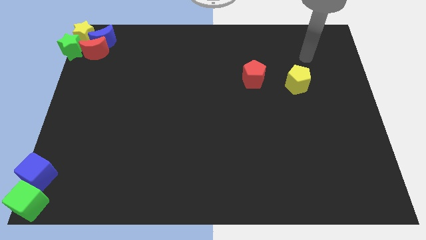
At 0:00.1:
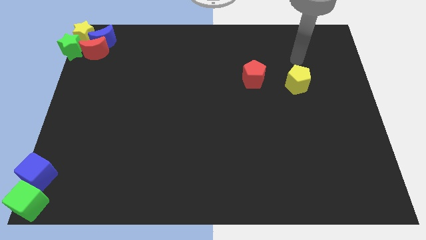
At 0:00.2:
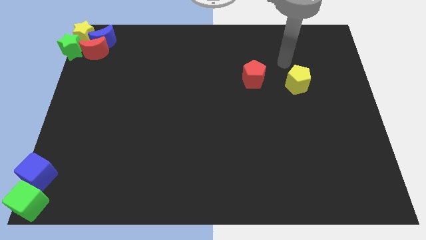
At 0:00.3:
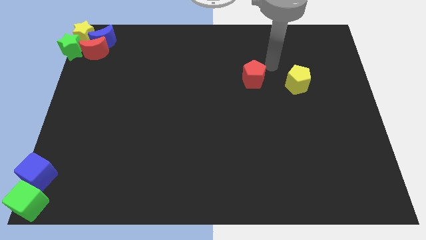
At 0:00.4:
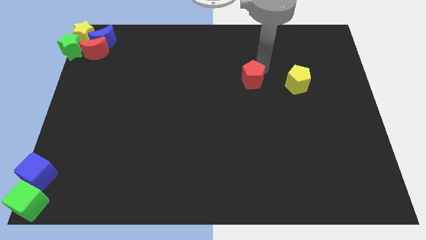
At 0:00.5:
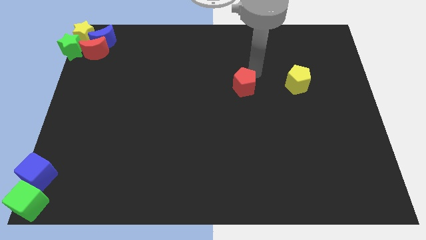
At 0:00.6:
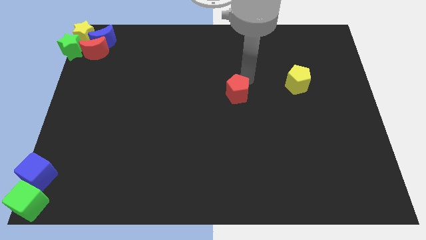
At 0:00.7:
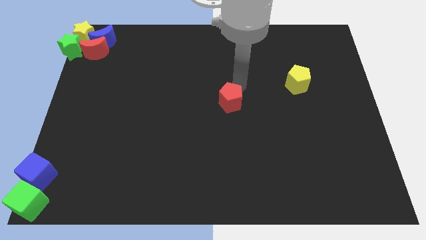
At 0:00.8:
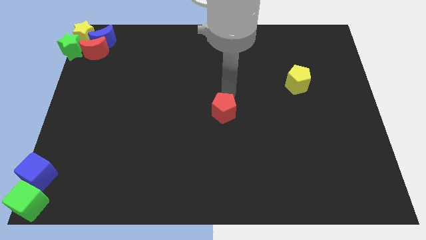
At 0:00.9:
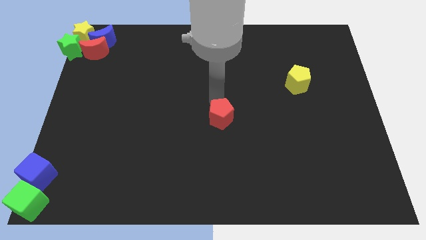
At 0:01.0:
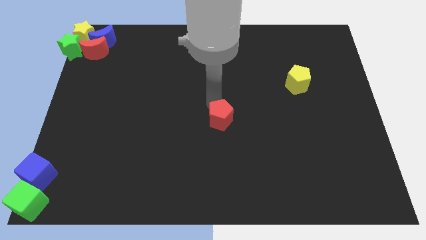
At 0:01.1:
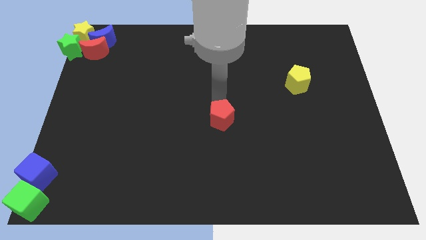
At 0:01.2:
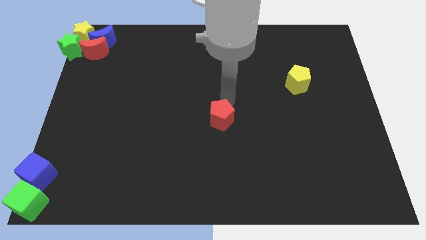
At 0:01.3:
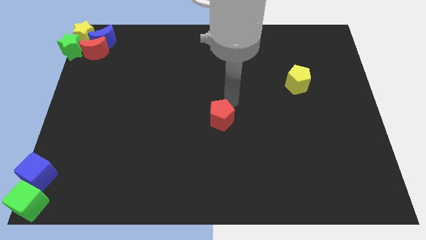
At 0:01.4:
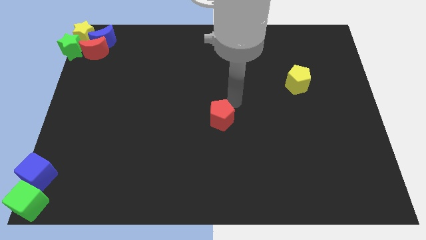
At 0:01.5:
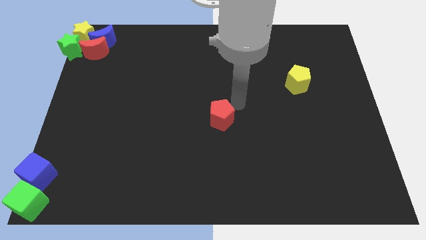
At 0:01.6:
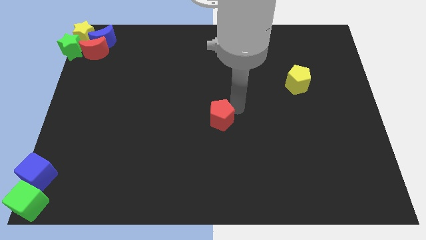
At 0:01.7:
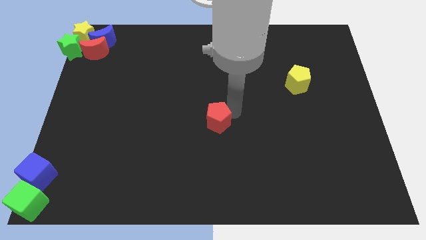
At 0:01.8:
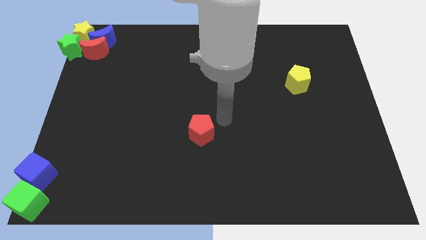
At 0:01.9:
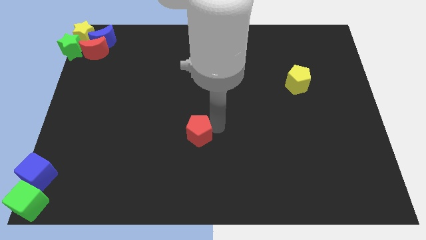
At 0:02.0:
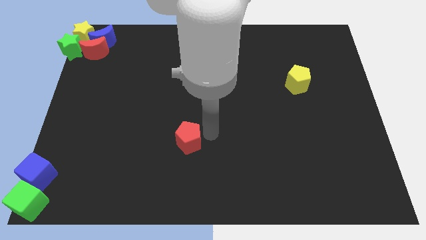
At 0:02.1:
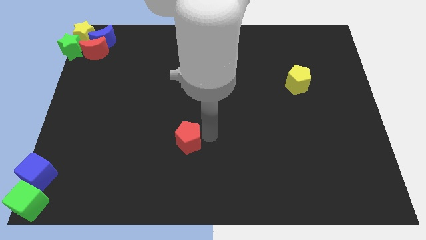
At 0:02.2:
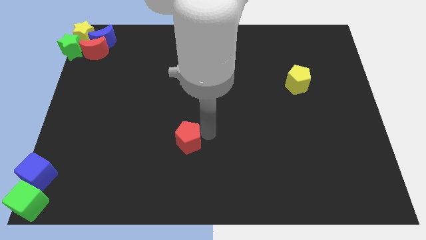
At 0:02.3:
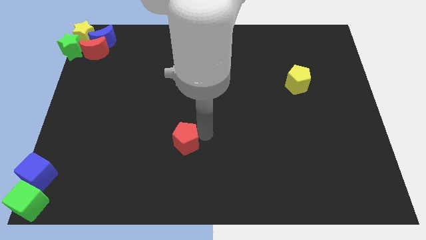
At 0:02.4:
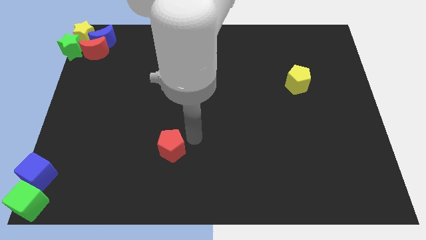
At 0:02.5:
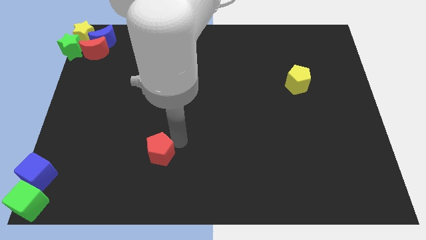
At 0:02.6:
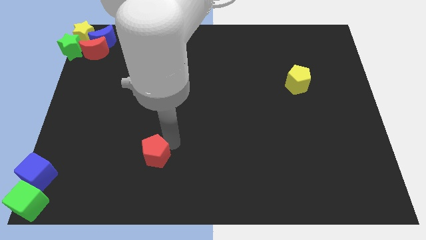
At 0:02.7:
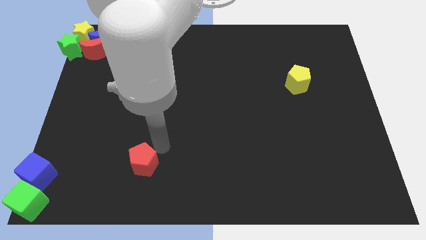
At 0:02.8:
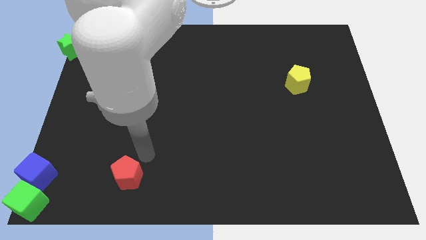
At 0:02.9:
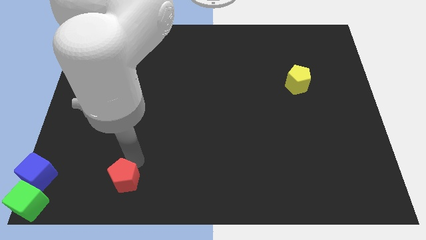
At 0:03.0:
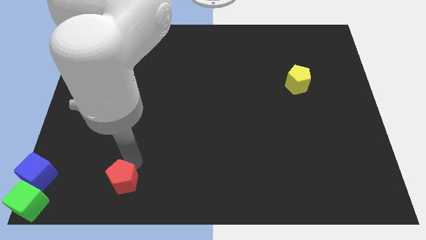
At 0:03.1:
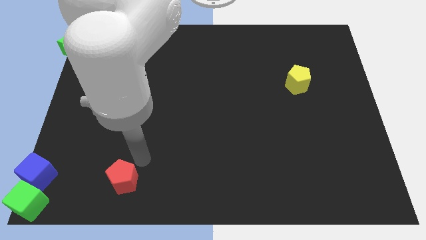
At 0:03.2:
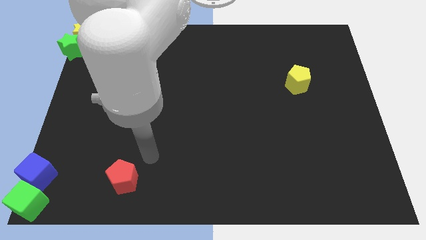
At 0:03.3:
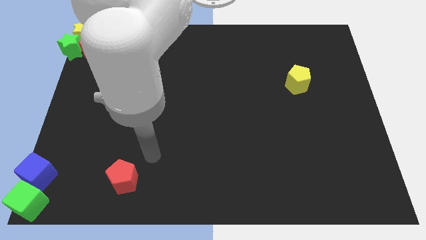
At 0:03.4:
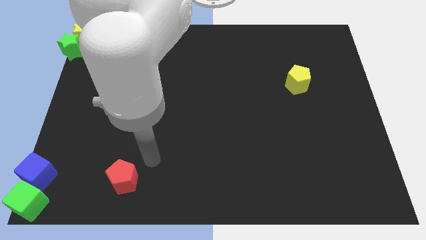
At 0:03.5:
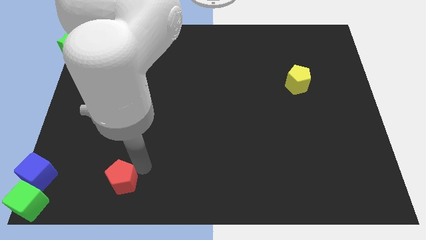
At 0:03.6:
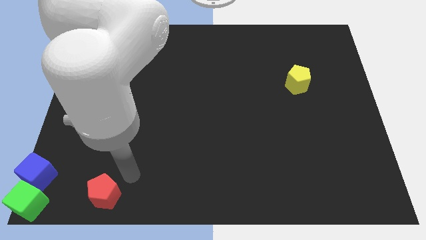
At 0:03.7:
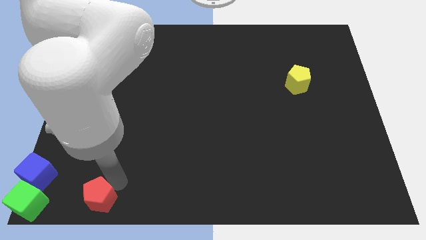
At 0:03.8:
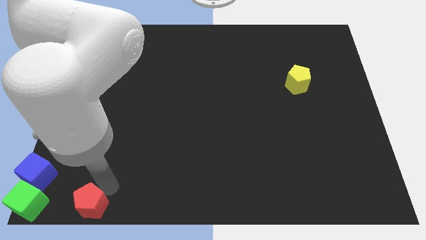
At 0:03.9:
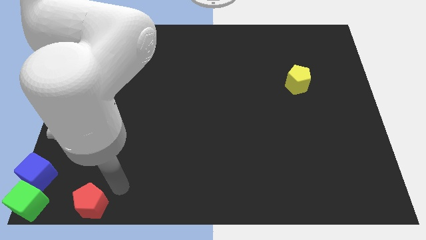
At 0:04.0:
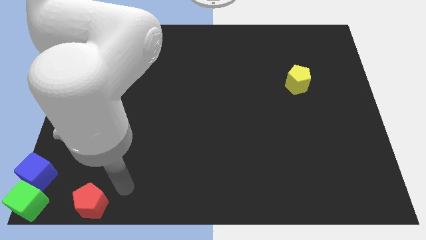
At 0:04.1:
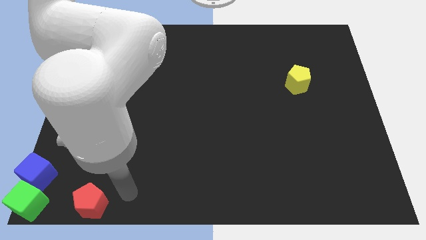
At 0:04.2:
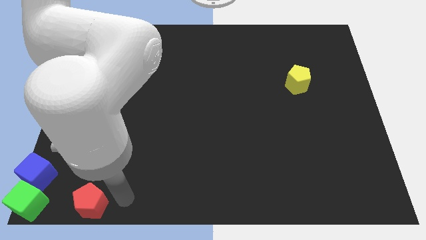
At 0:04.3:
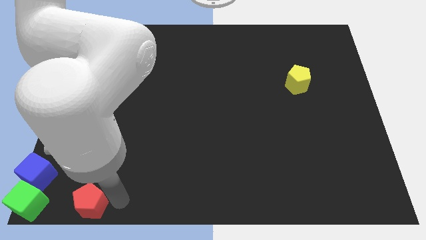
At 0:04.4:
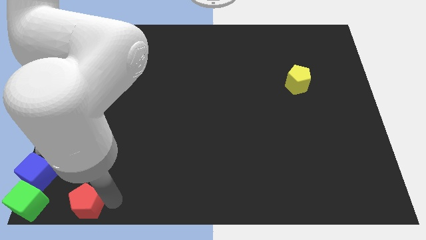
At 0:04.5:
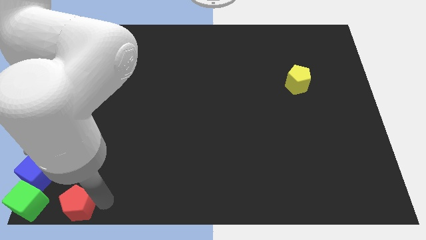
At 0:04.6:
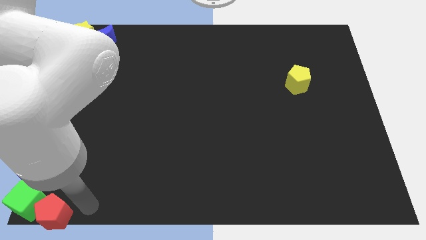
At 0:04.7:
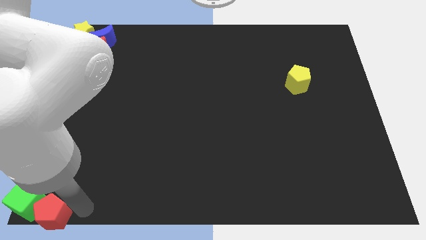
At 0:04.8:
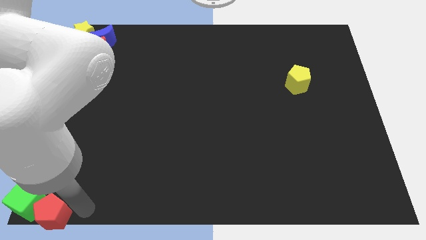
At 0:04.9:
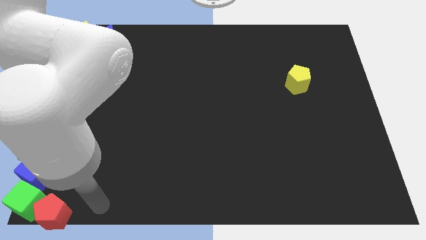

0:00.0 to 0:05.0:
move red pentagon towards the bottom left of the board

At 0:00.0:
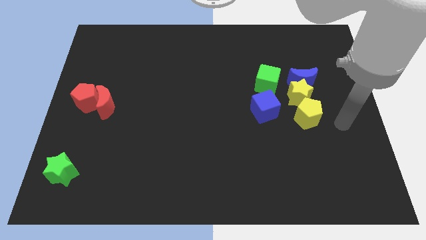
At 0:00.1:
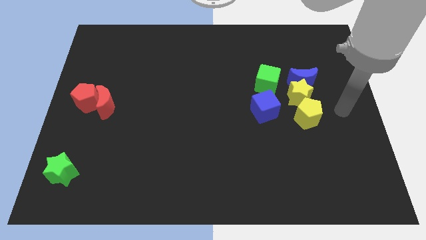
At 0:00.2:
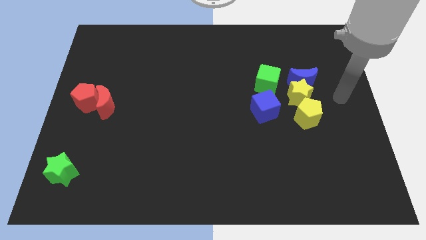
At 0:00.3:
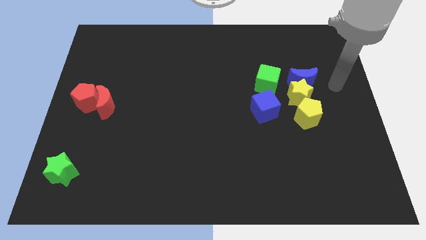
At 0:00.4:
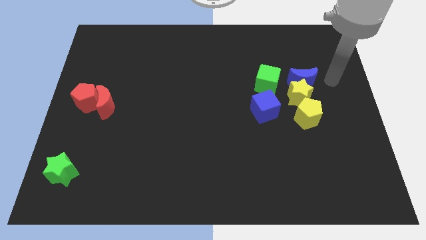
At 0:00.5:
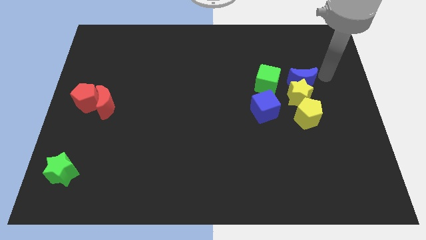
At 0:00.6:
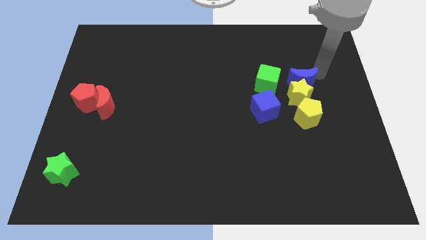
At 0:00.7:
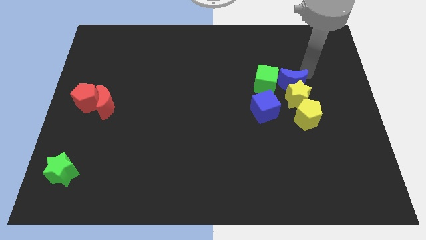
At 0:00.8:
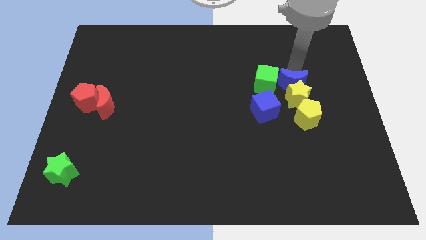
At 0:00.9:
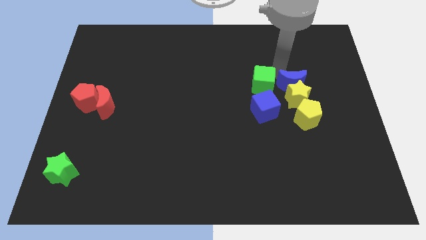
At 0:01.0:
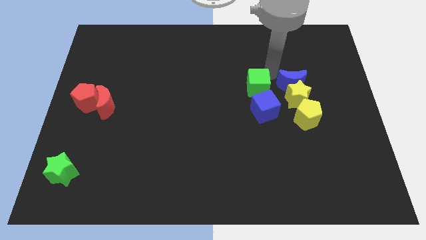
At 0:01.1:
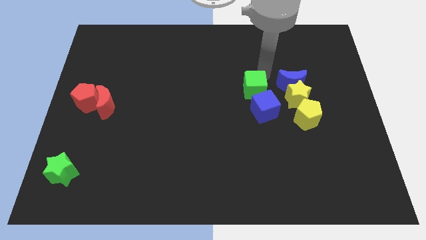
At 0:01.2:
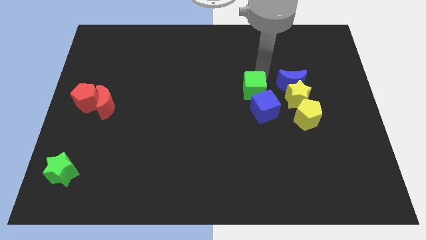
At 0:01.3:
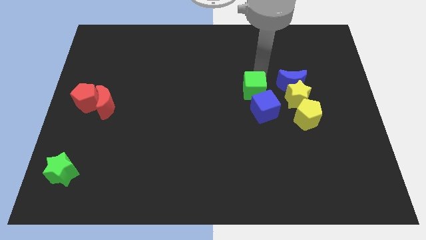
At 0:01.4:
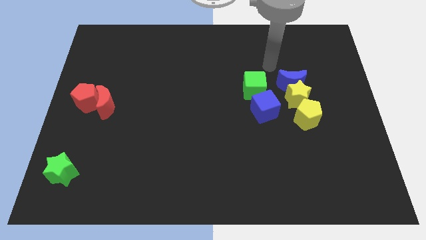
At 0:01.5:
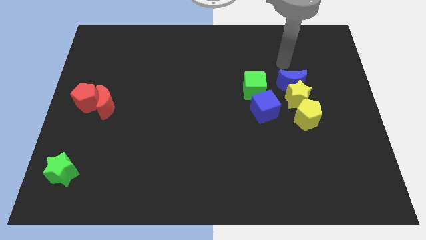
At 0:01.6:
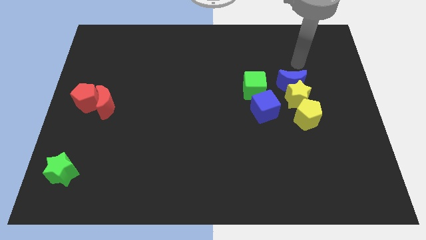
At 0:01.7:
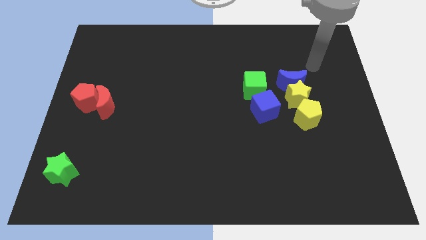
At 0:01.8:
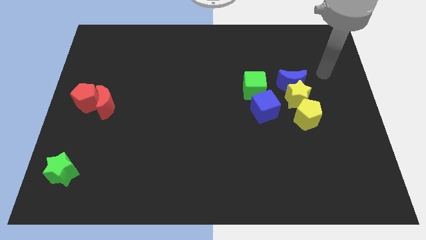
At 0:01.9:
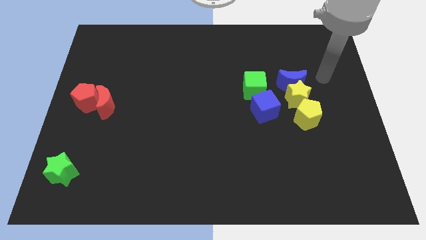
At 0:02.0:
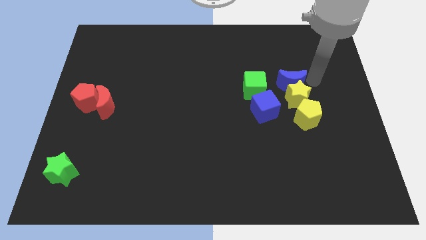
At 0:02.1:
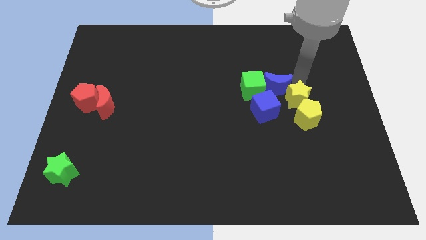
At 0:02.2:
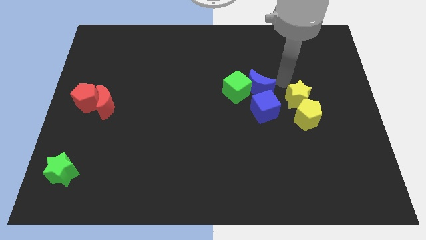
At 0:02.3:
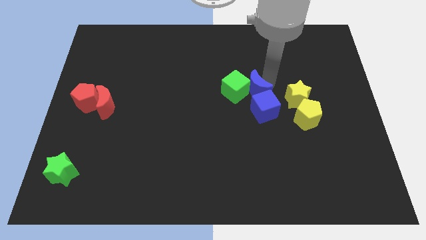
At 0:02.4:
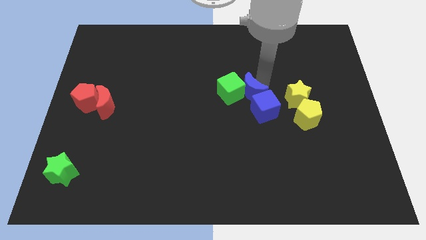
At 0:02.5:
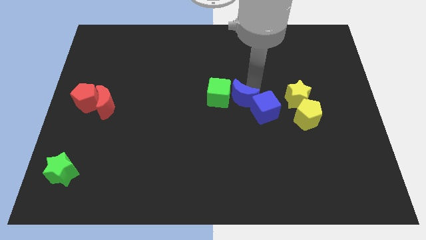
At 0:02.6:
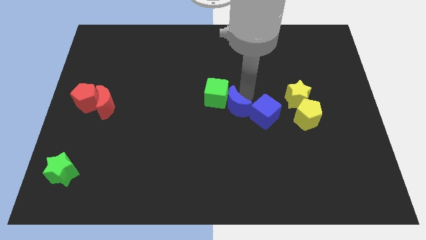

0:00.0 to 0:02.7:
push blue moon towards left side of the board

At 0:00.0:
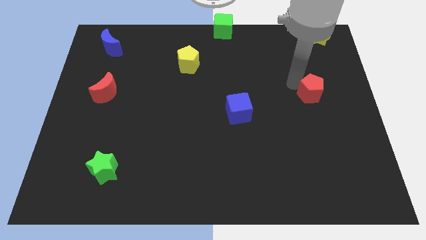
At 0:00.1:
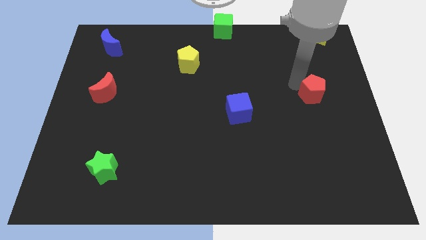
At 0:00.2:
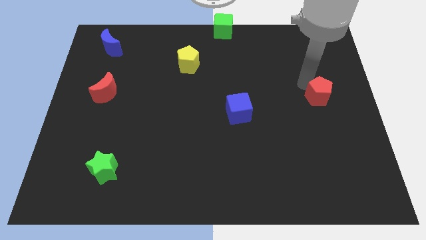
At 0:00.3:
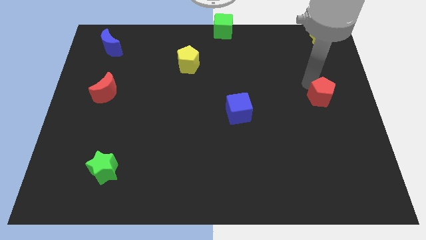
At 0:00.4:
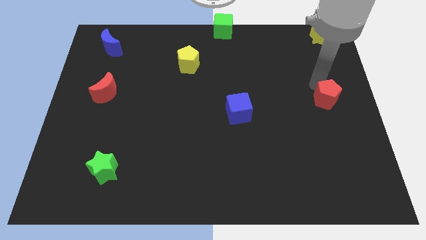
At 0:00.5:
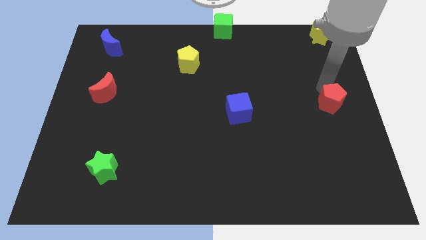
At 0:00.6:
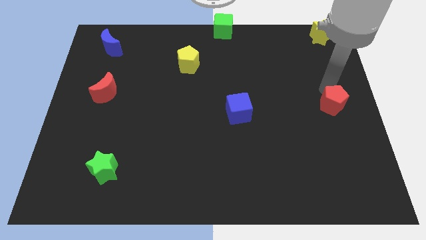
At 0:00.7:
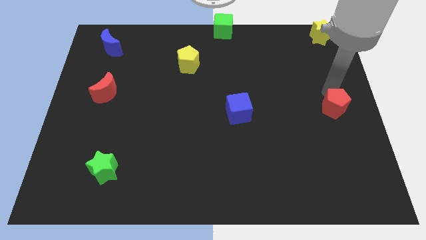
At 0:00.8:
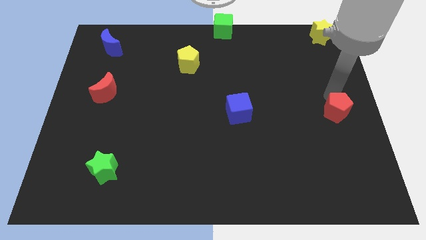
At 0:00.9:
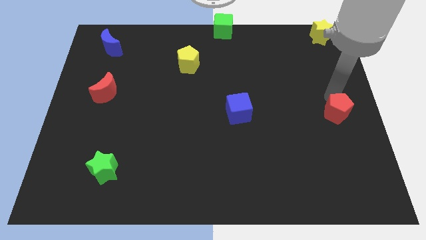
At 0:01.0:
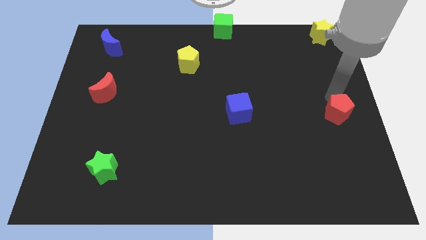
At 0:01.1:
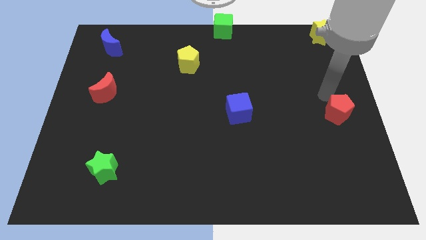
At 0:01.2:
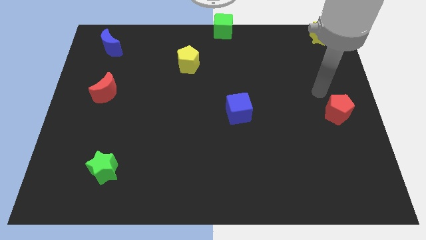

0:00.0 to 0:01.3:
move the red pentagon to the right center of the board
